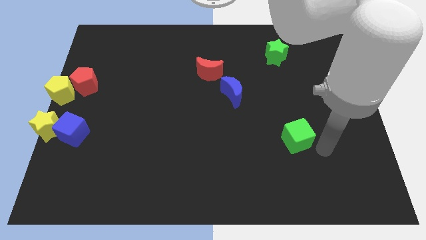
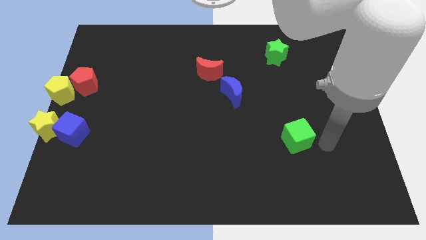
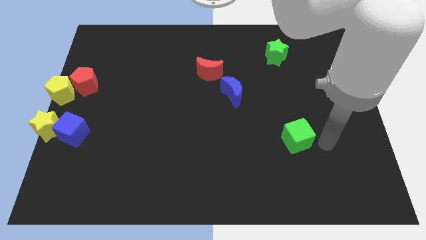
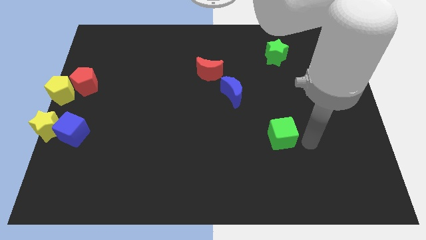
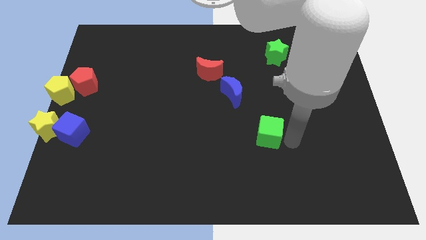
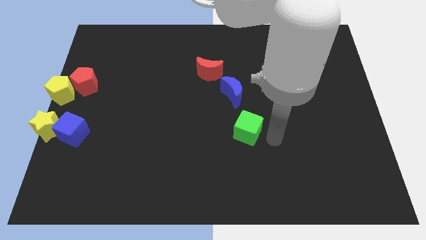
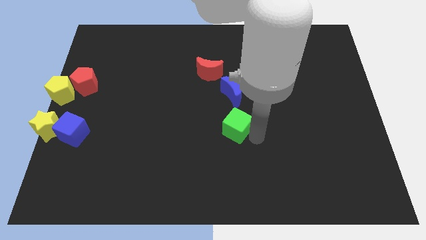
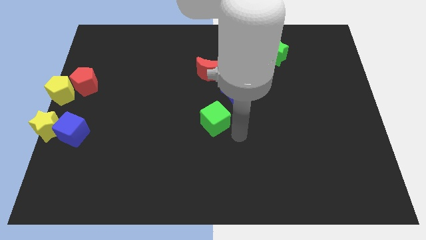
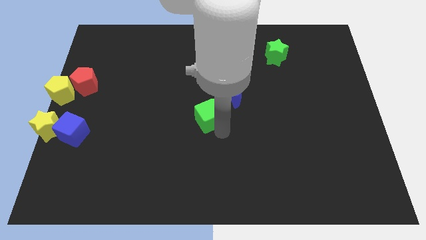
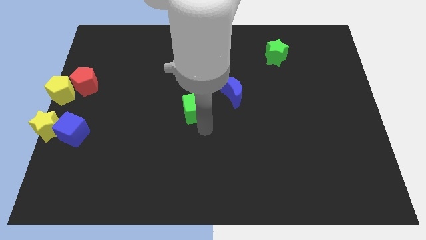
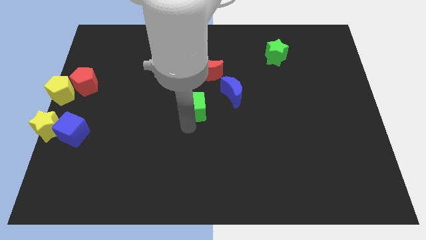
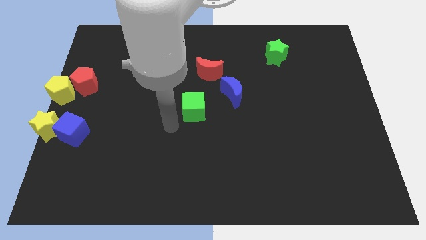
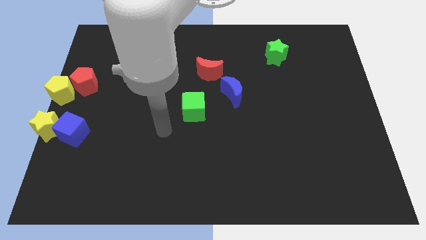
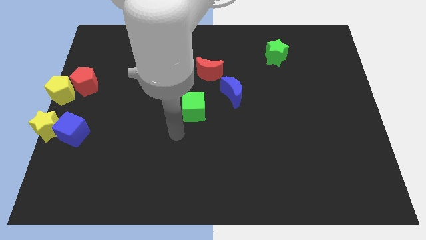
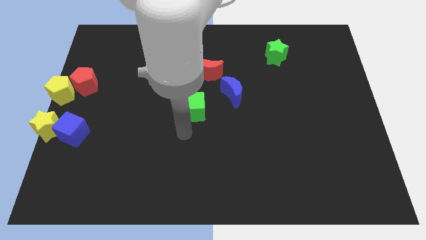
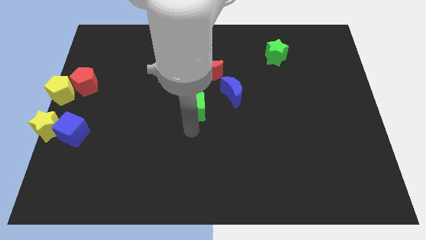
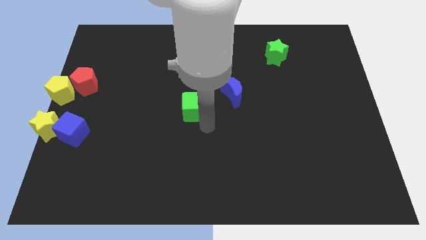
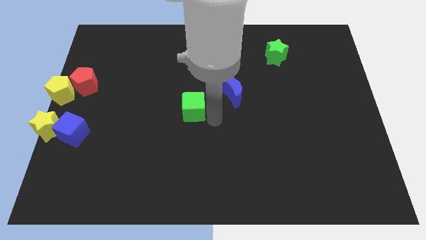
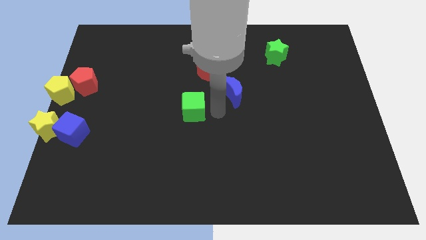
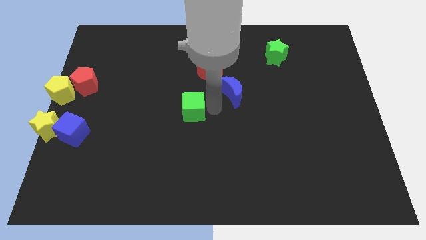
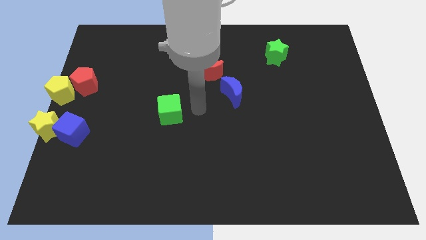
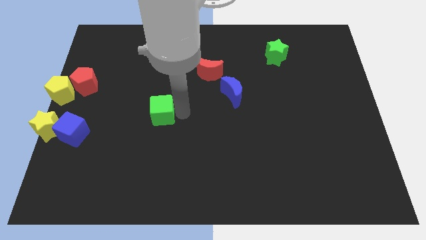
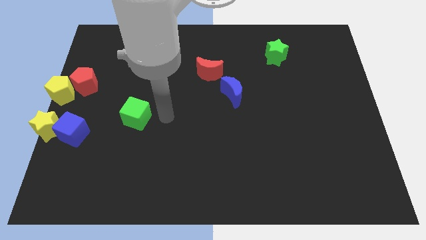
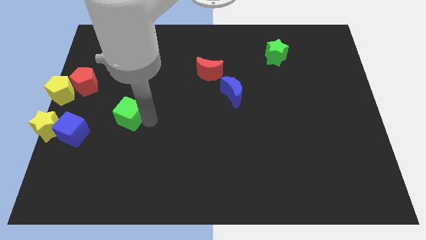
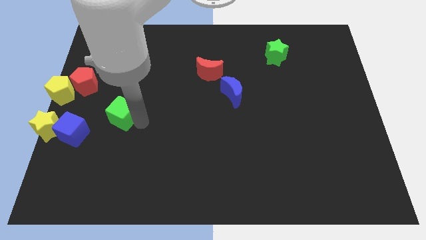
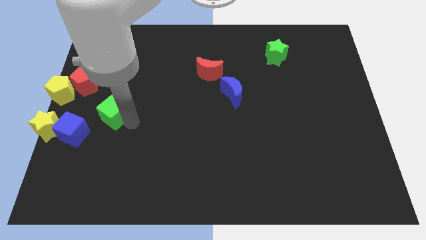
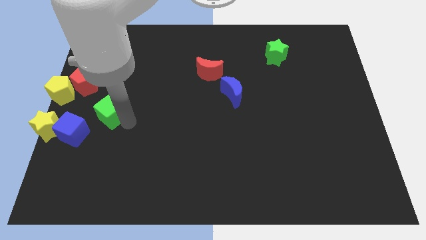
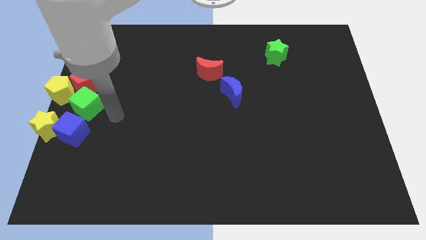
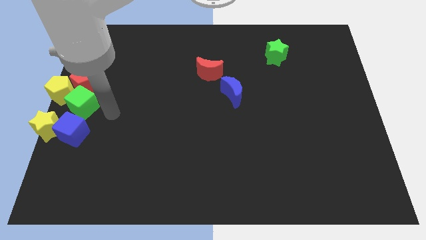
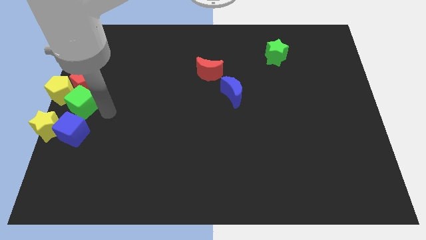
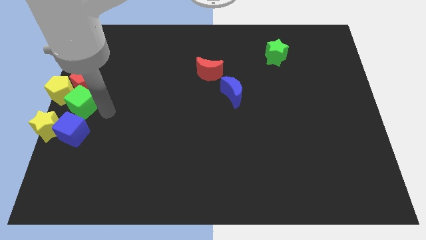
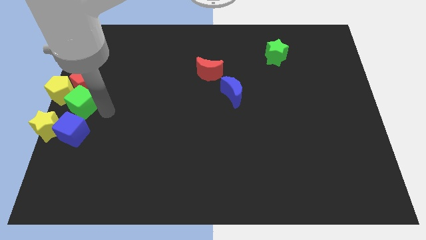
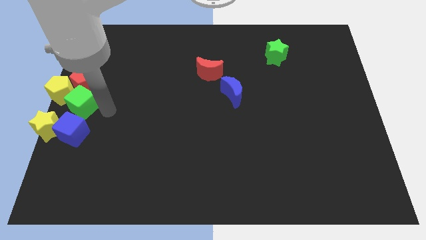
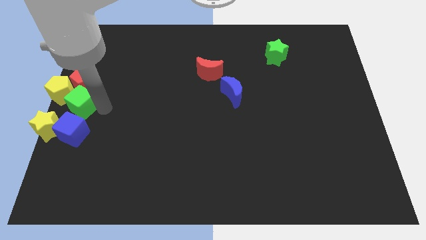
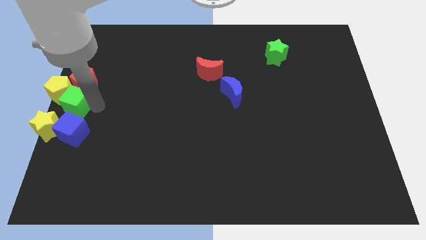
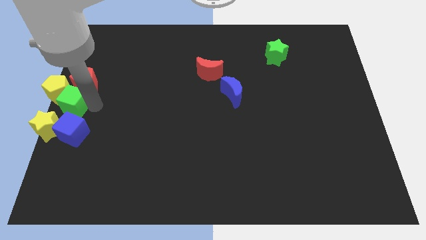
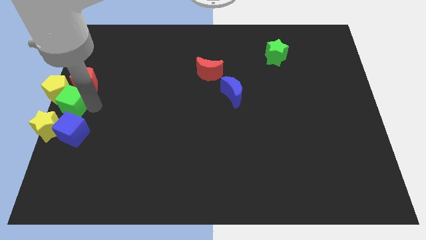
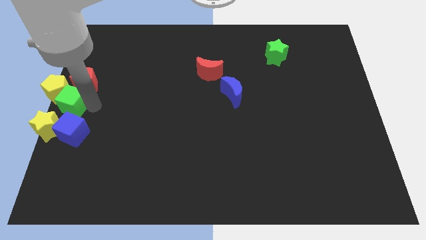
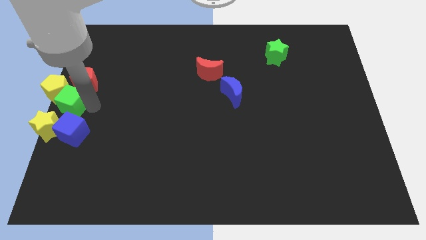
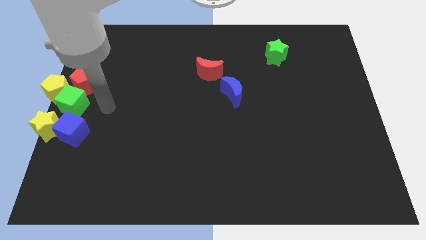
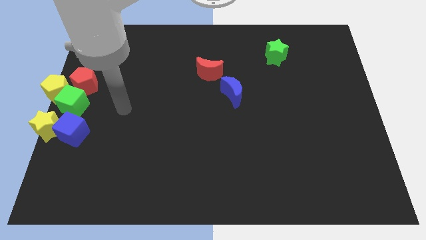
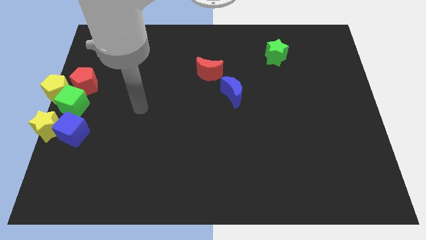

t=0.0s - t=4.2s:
push the green cube into yellow pentagon

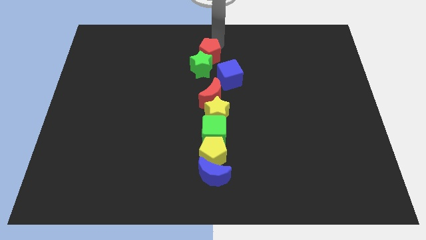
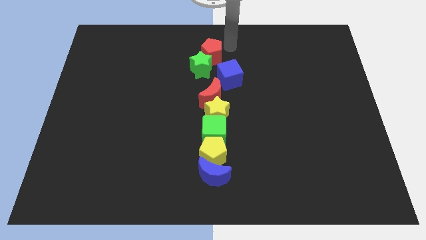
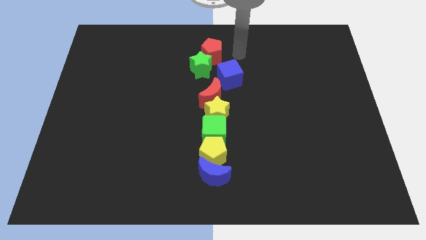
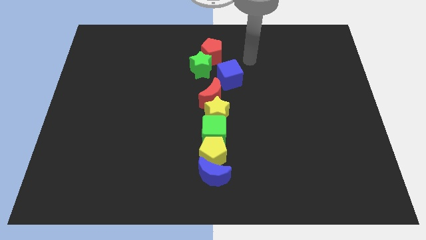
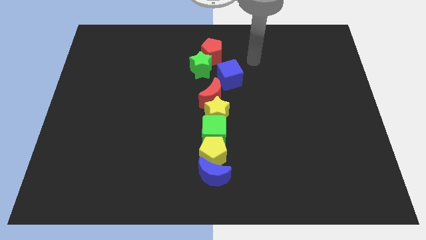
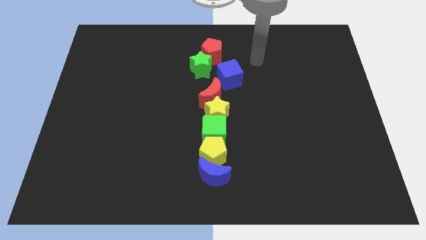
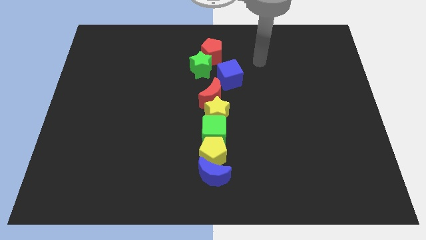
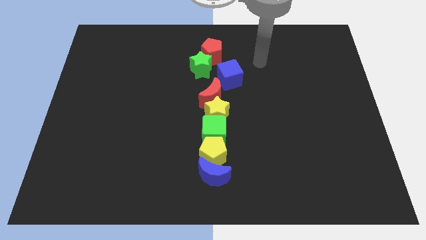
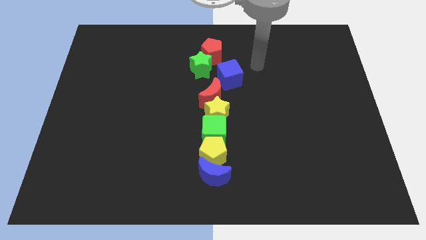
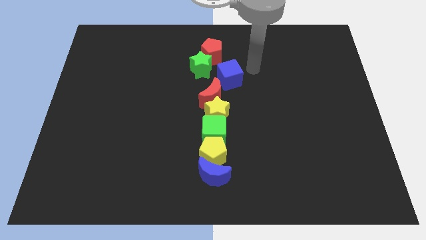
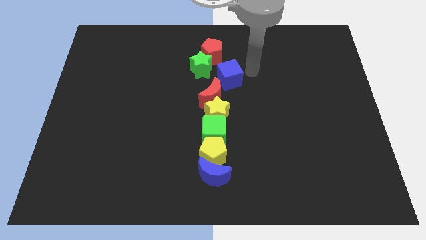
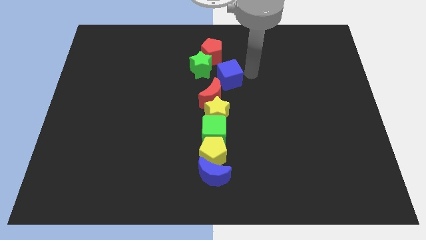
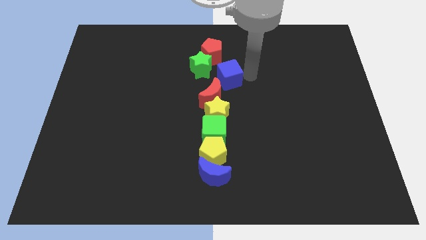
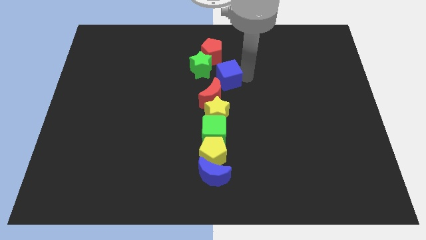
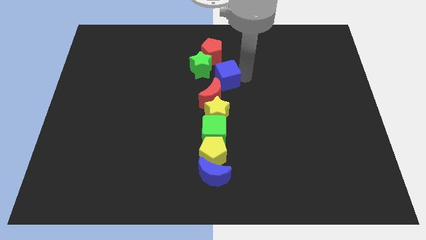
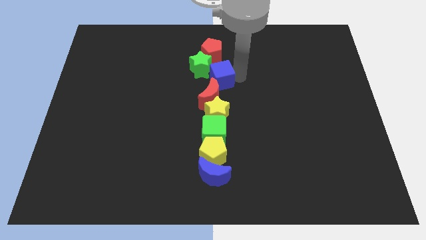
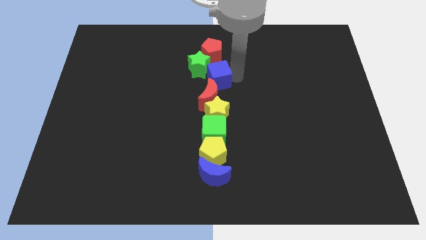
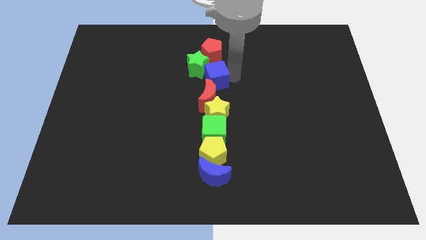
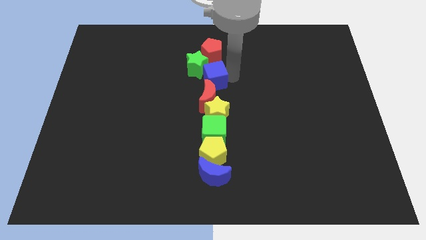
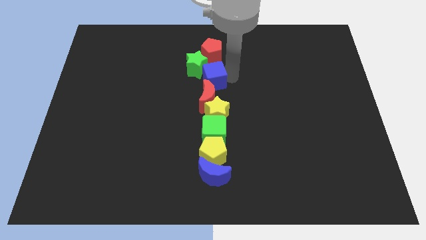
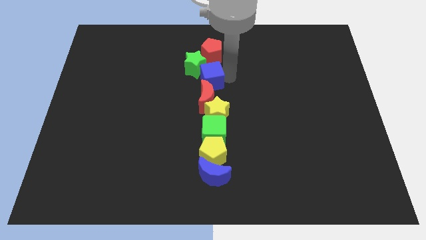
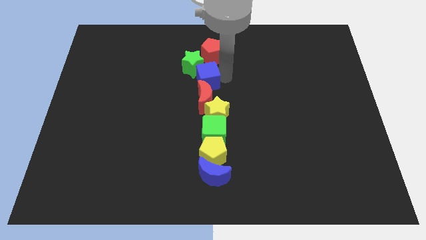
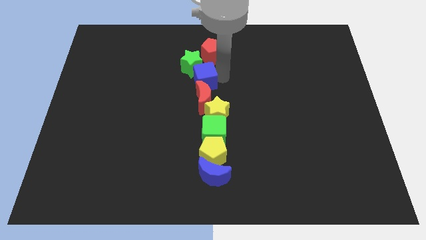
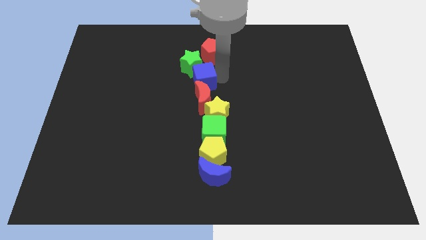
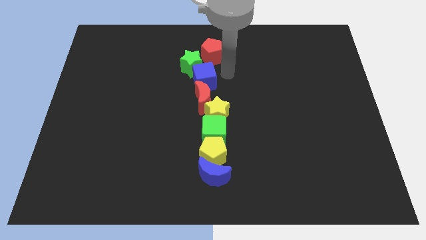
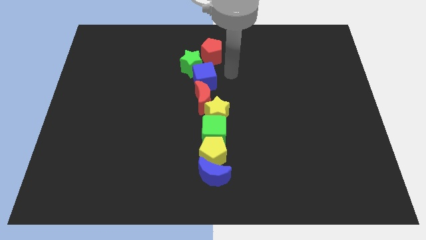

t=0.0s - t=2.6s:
slightly move the blue cube towards the left to the board

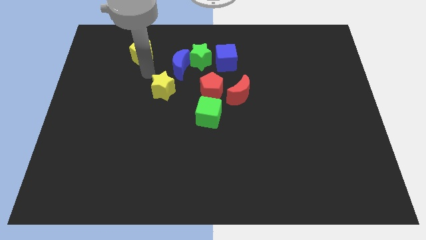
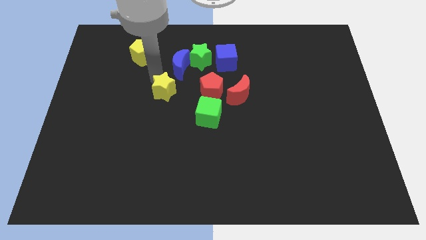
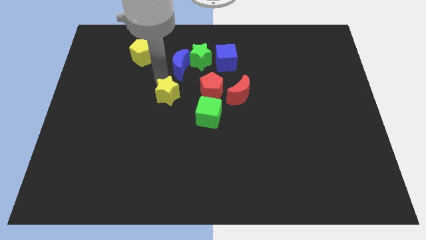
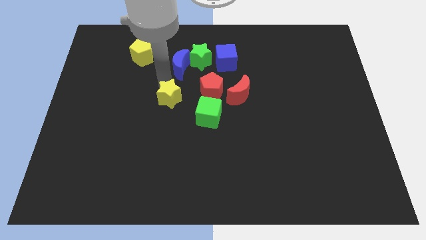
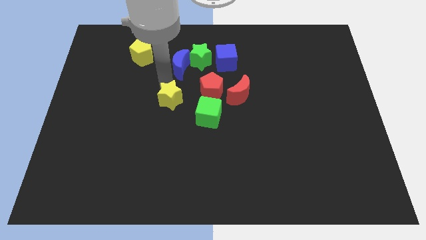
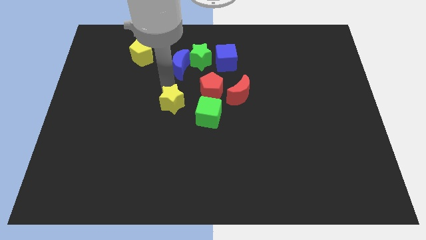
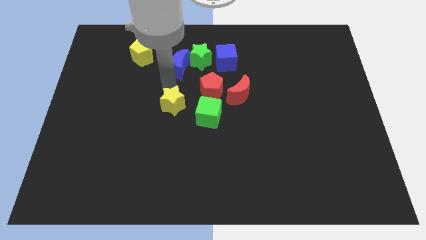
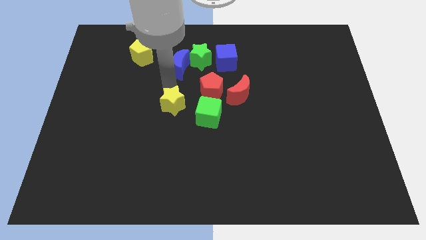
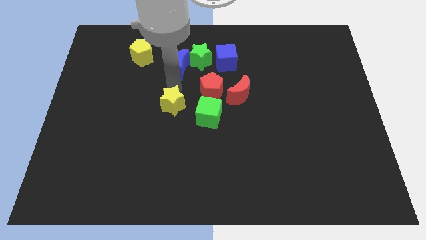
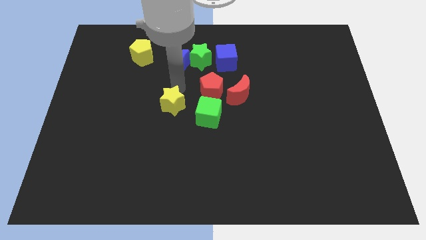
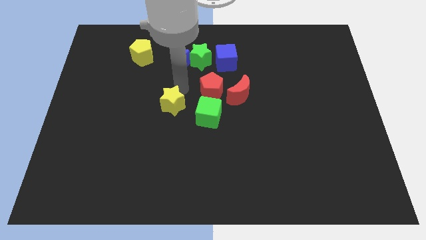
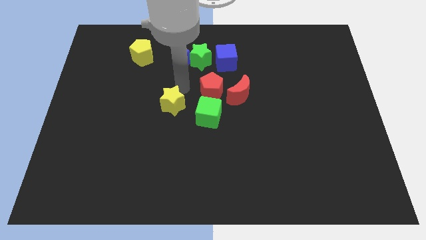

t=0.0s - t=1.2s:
place the yellow star to the left of the green cube

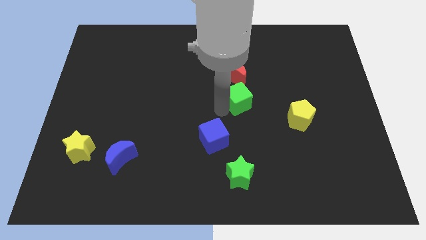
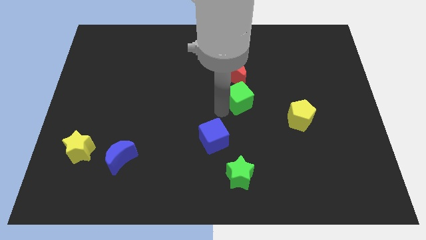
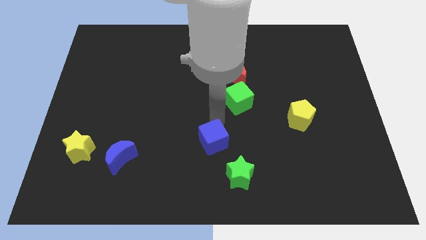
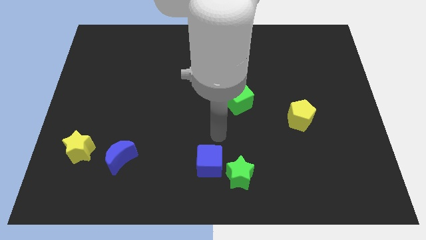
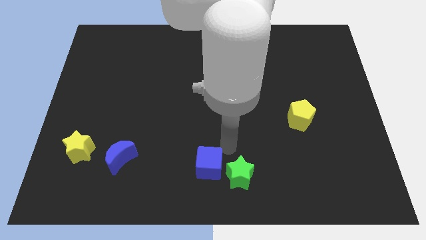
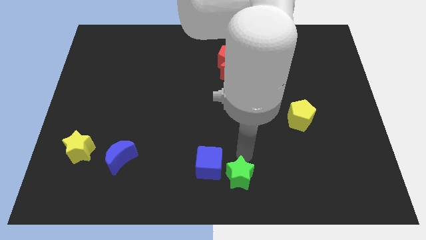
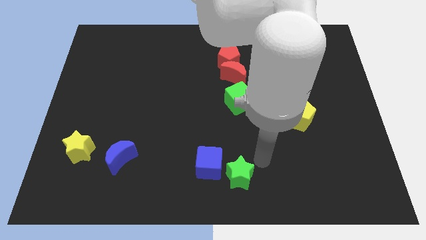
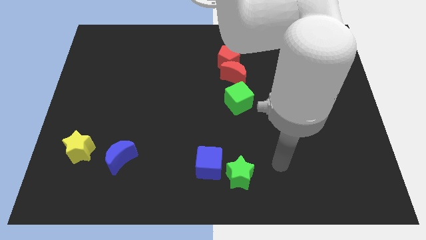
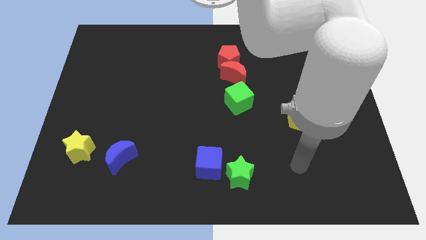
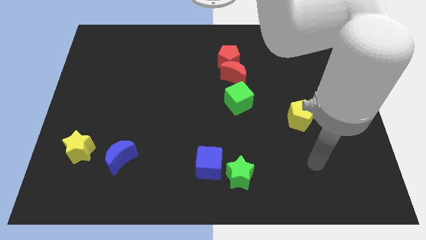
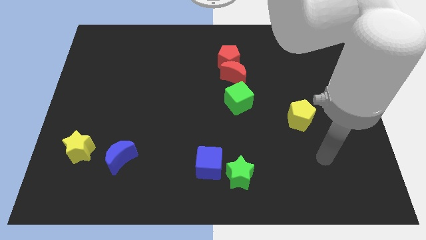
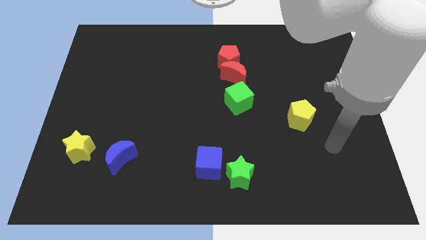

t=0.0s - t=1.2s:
push the blue cube to the left of the green star
